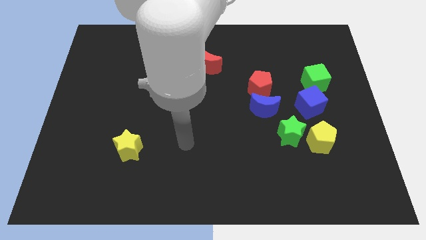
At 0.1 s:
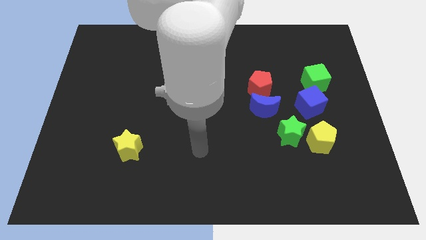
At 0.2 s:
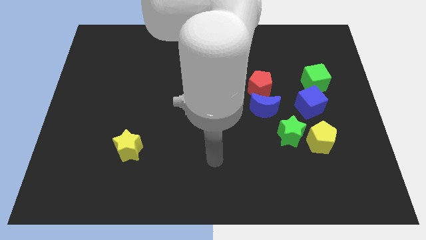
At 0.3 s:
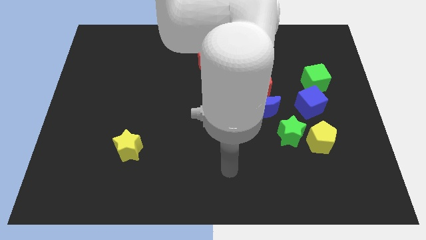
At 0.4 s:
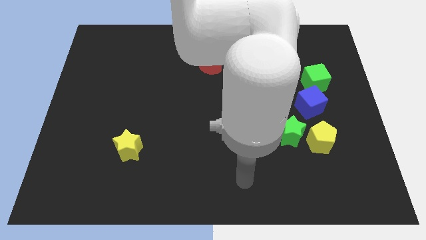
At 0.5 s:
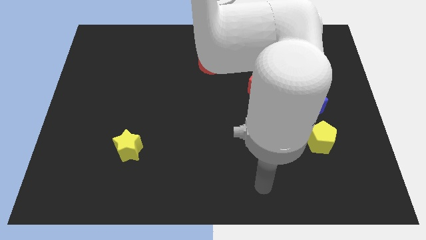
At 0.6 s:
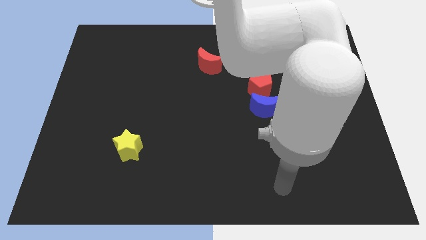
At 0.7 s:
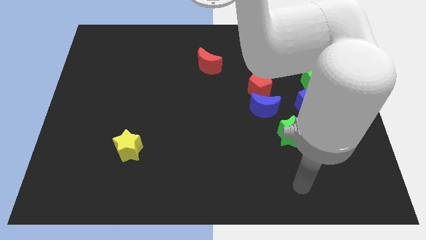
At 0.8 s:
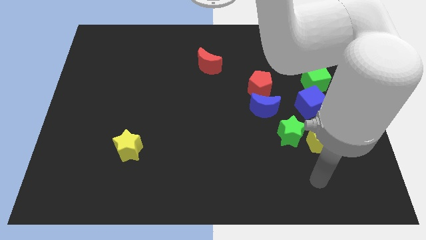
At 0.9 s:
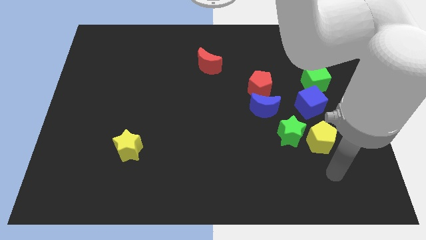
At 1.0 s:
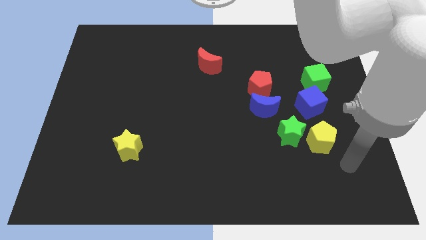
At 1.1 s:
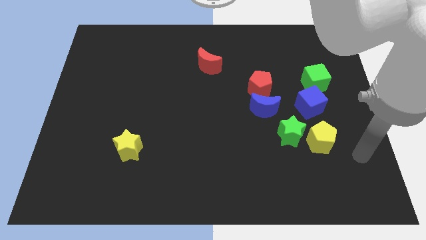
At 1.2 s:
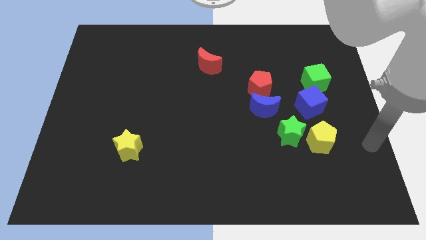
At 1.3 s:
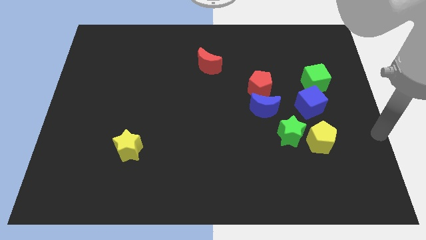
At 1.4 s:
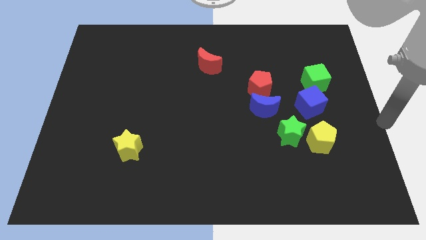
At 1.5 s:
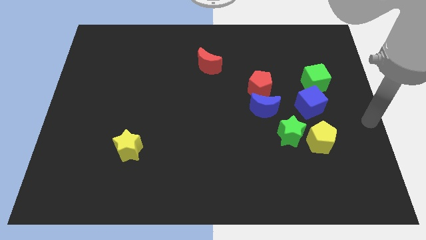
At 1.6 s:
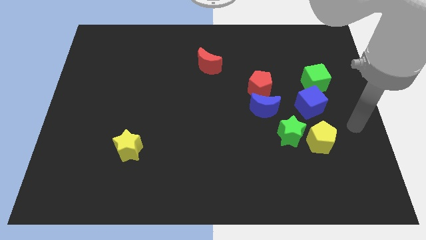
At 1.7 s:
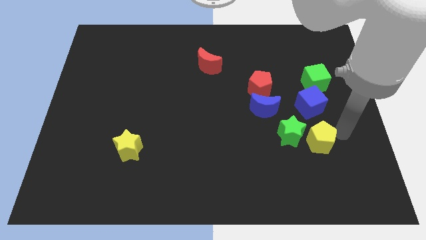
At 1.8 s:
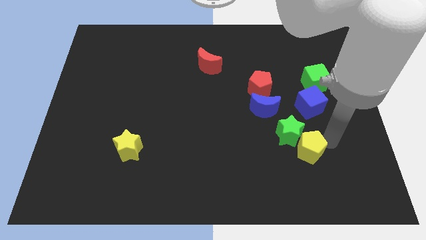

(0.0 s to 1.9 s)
touch the yellow pentagon

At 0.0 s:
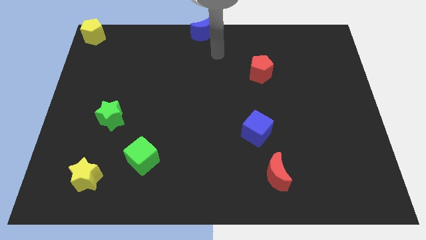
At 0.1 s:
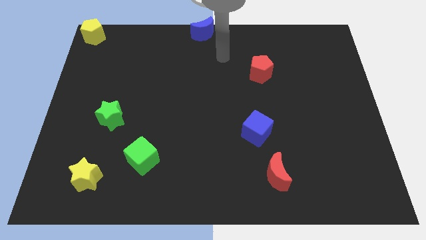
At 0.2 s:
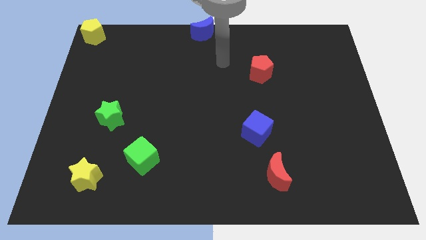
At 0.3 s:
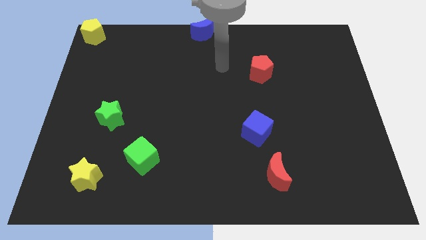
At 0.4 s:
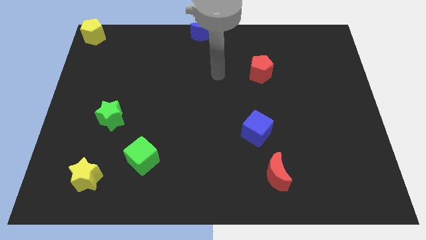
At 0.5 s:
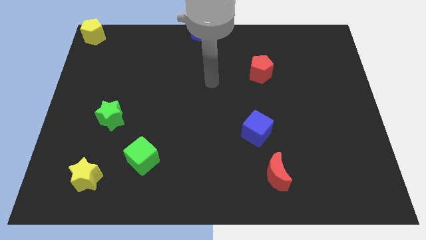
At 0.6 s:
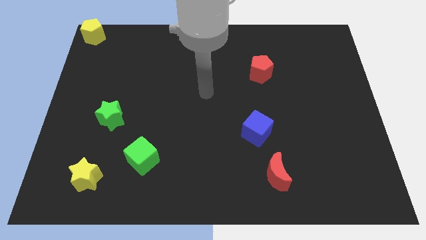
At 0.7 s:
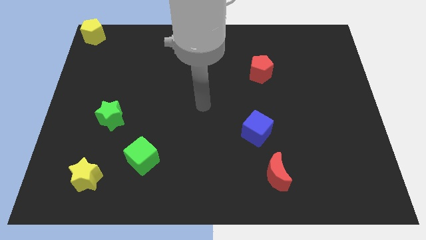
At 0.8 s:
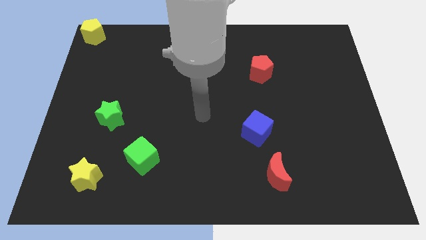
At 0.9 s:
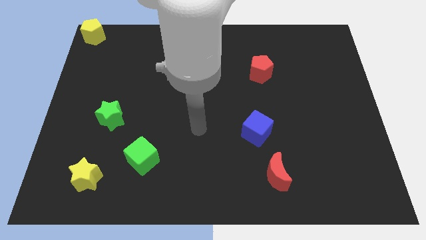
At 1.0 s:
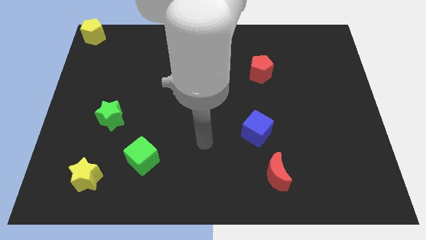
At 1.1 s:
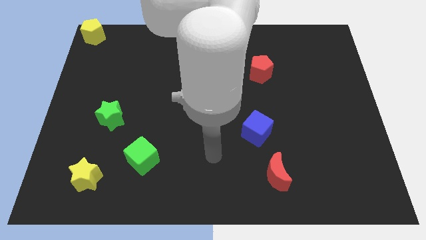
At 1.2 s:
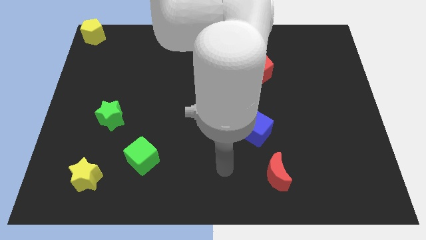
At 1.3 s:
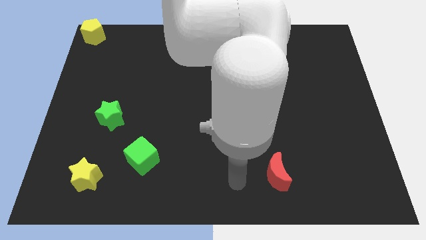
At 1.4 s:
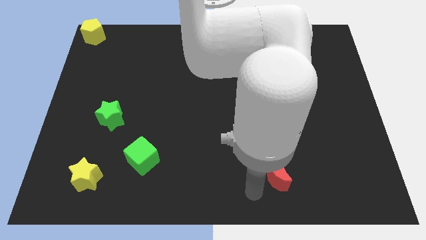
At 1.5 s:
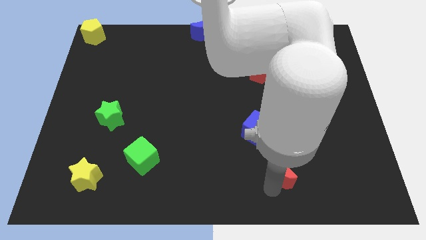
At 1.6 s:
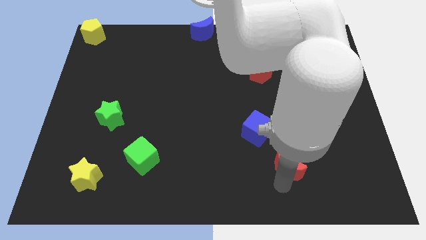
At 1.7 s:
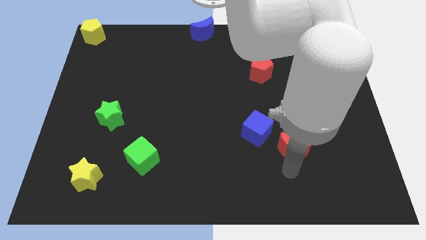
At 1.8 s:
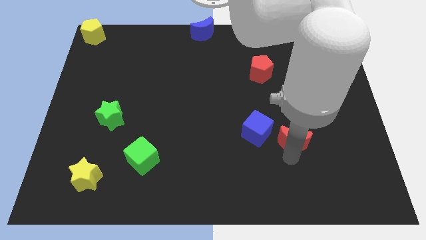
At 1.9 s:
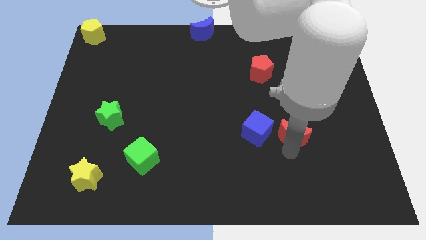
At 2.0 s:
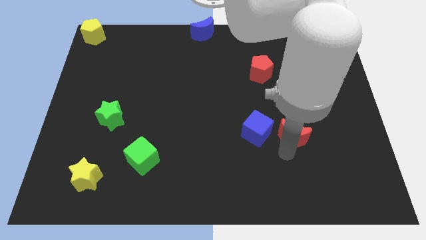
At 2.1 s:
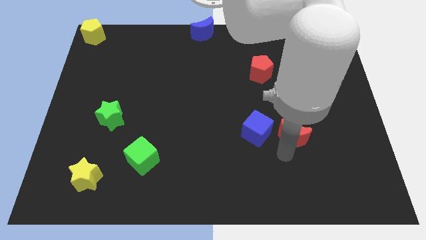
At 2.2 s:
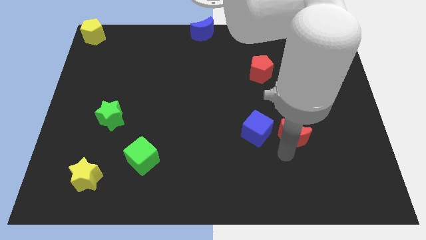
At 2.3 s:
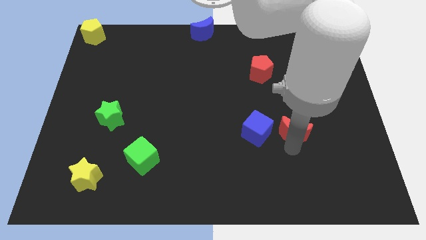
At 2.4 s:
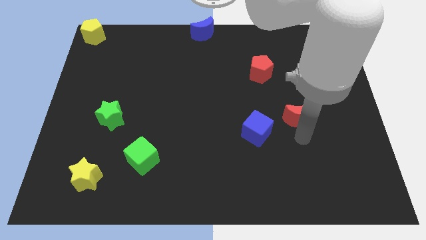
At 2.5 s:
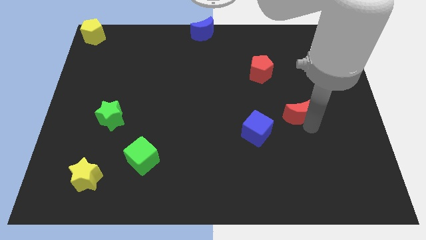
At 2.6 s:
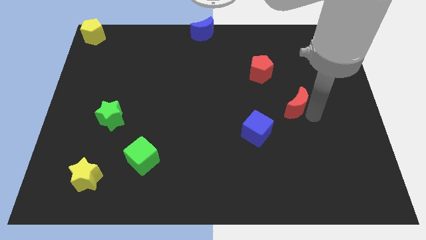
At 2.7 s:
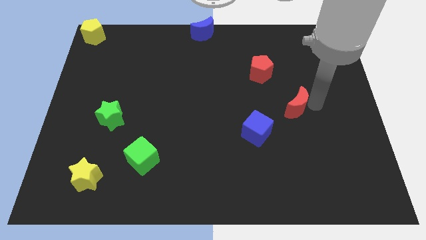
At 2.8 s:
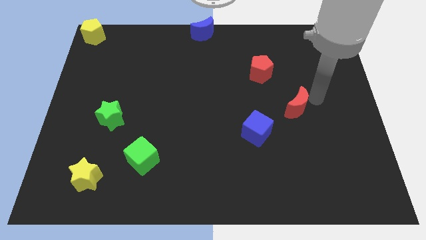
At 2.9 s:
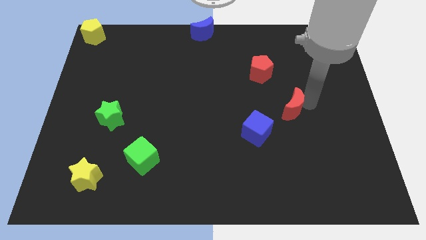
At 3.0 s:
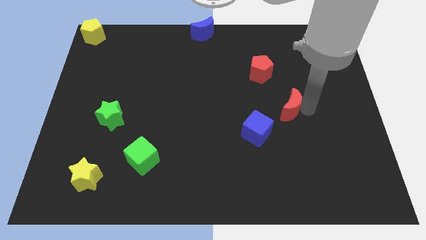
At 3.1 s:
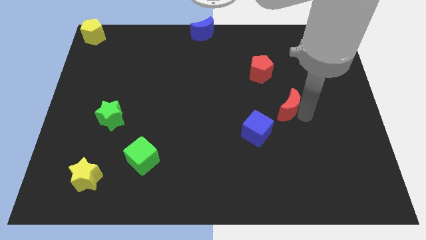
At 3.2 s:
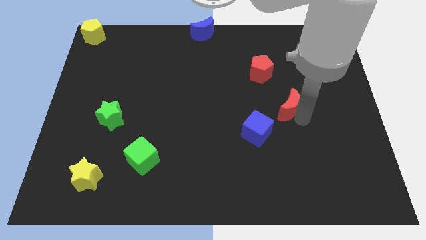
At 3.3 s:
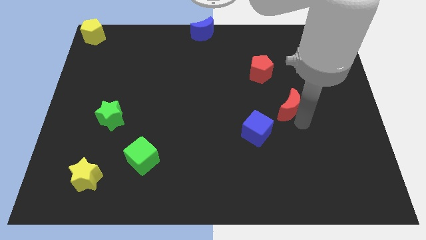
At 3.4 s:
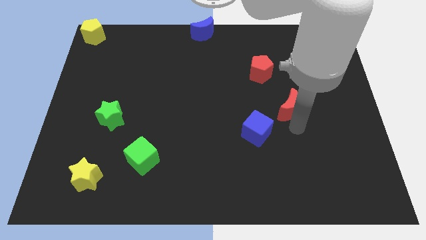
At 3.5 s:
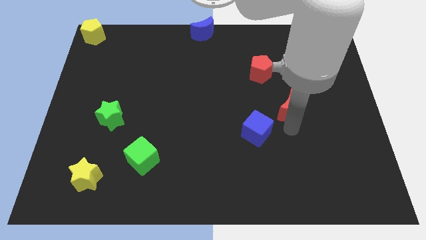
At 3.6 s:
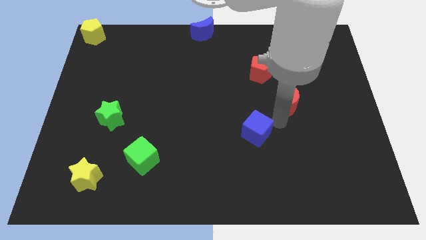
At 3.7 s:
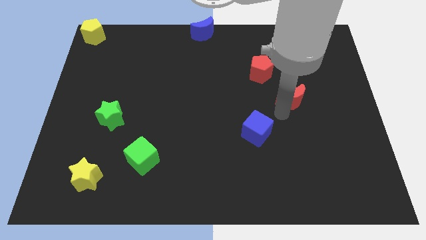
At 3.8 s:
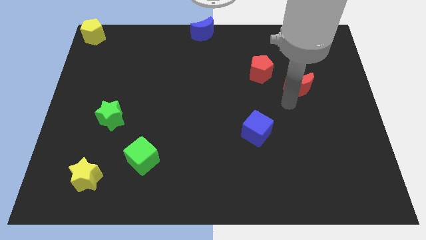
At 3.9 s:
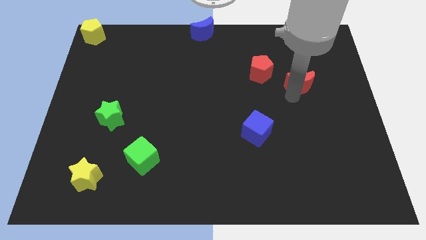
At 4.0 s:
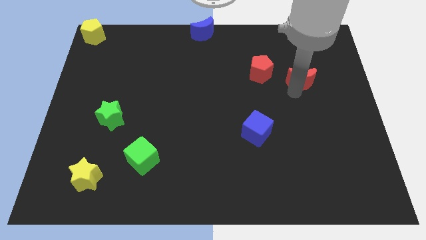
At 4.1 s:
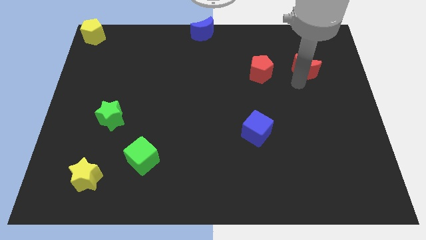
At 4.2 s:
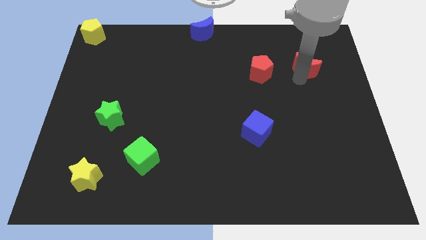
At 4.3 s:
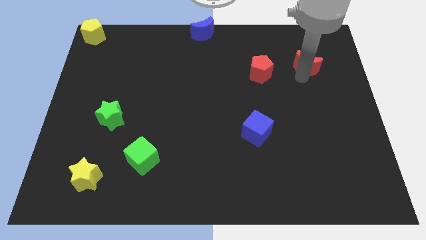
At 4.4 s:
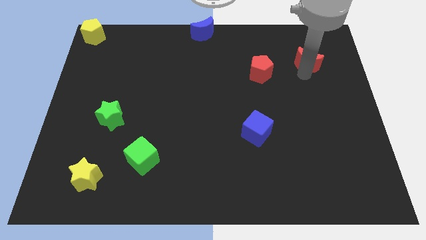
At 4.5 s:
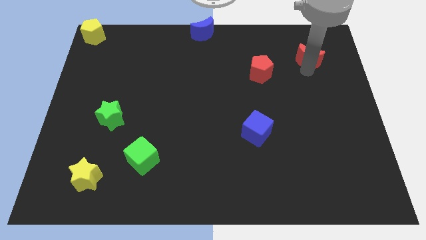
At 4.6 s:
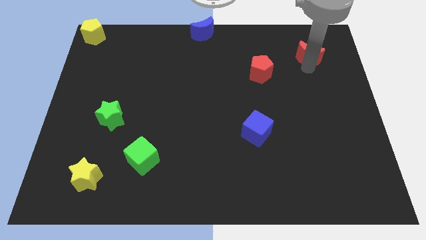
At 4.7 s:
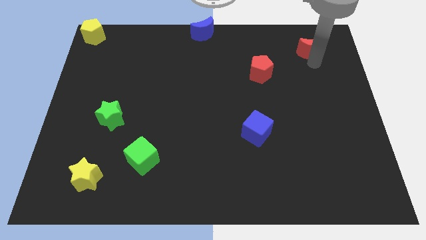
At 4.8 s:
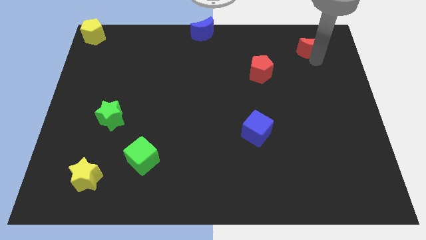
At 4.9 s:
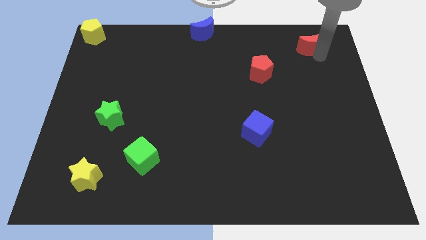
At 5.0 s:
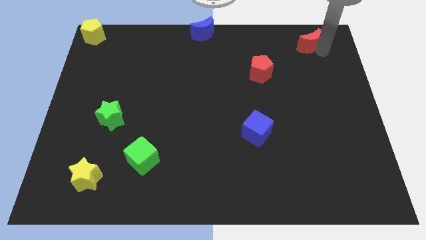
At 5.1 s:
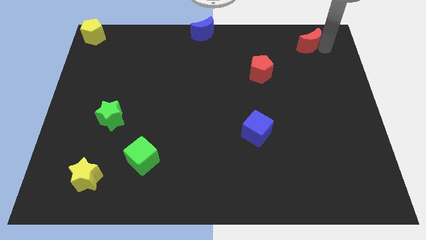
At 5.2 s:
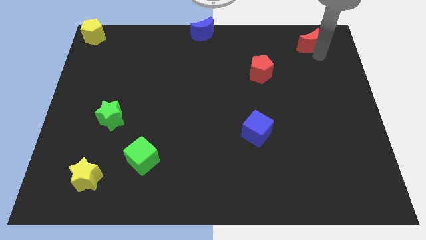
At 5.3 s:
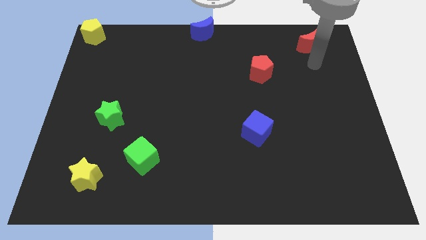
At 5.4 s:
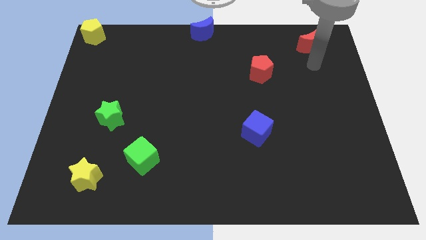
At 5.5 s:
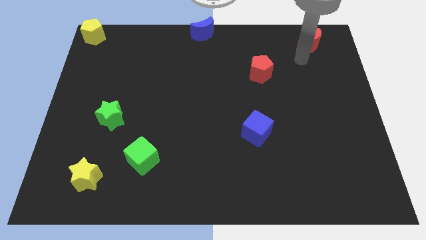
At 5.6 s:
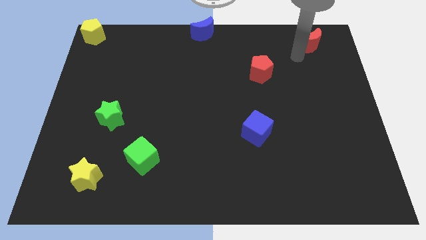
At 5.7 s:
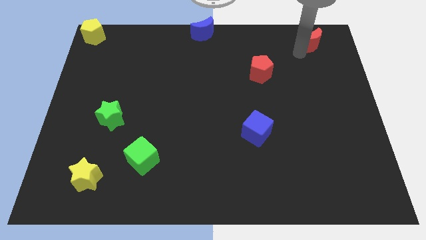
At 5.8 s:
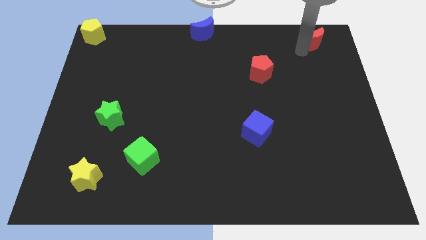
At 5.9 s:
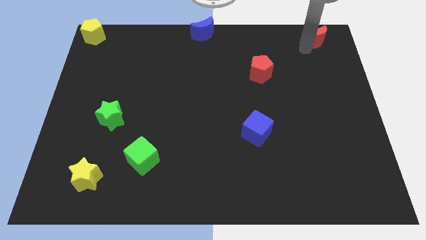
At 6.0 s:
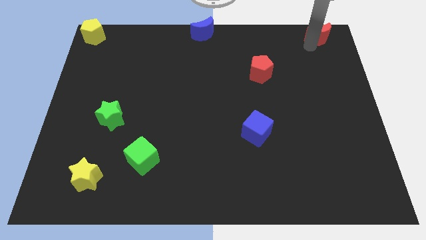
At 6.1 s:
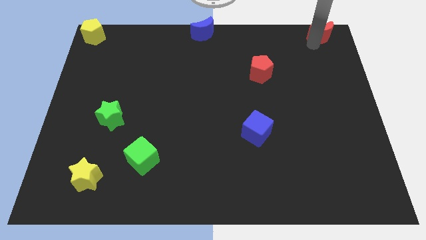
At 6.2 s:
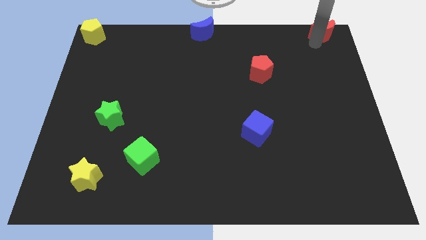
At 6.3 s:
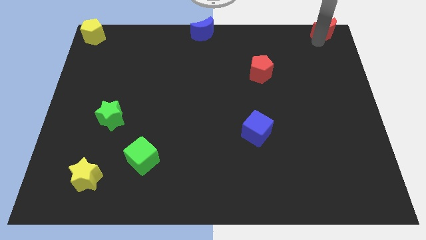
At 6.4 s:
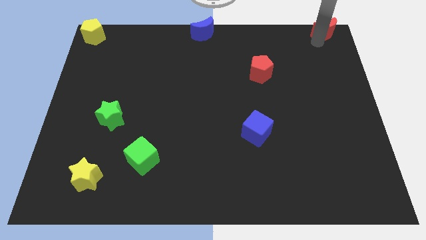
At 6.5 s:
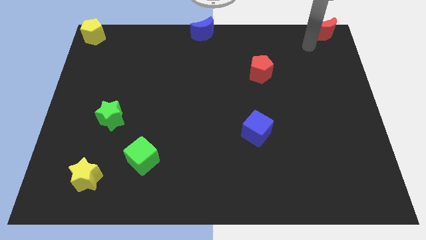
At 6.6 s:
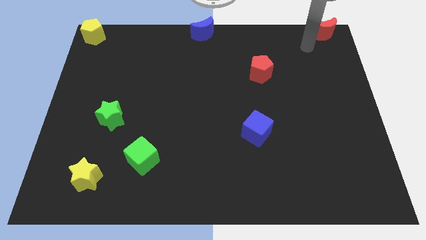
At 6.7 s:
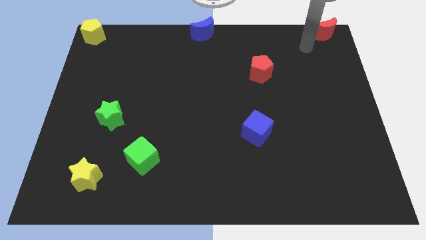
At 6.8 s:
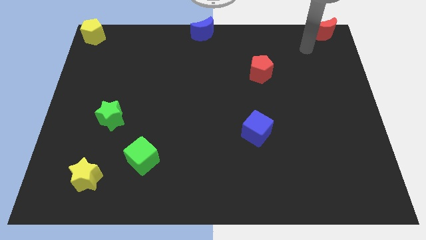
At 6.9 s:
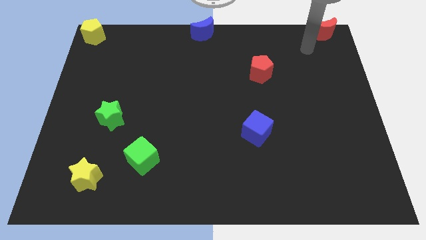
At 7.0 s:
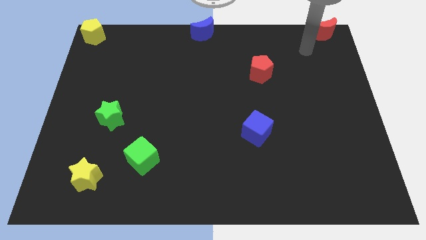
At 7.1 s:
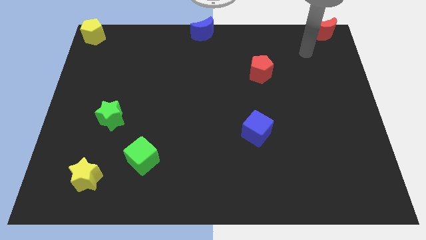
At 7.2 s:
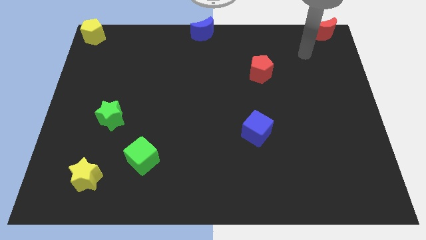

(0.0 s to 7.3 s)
place the red moon to the top right side of the board
